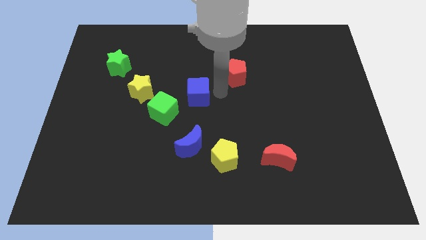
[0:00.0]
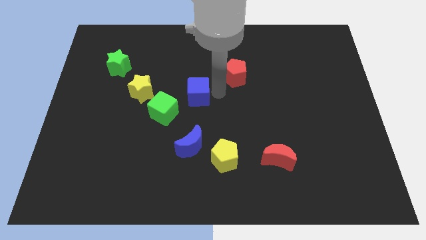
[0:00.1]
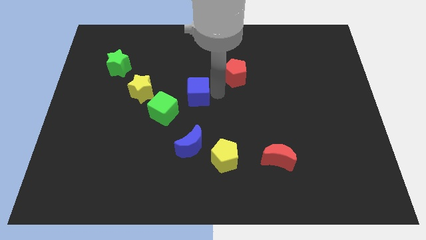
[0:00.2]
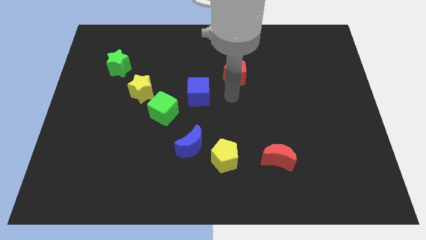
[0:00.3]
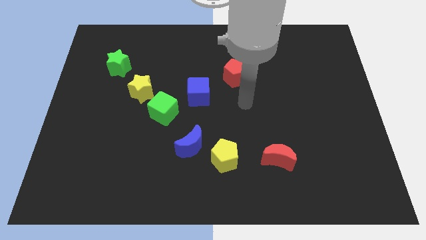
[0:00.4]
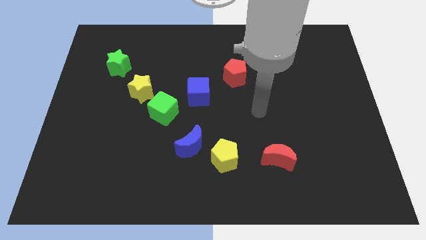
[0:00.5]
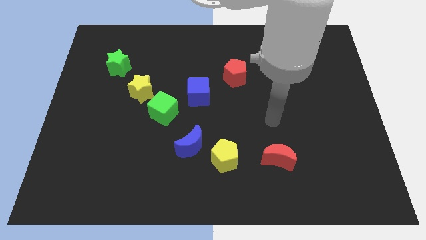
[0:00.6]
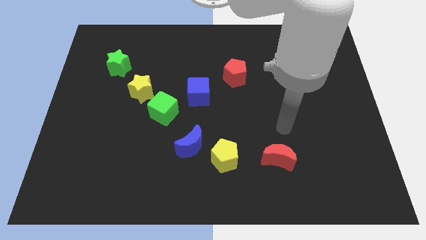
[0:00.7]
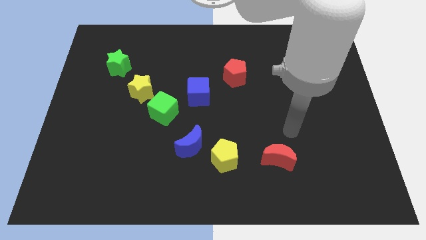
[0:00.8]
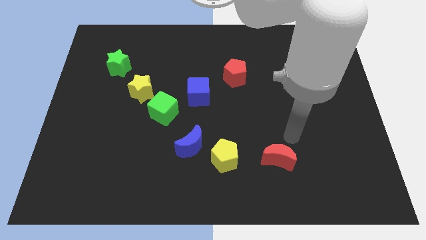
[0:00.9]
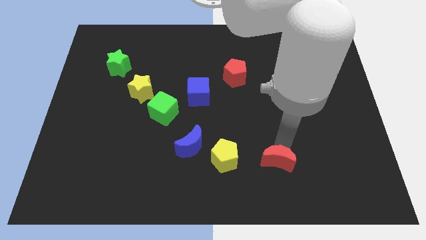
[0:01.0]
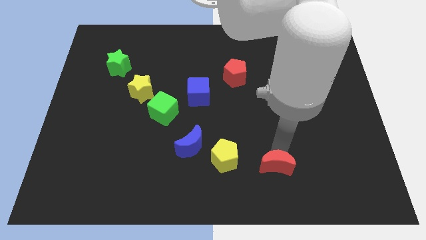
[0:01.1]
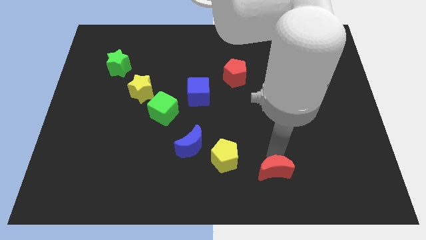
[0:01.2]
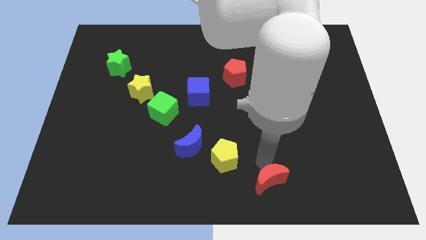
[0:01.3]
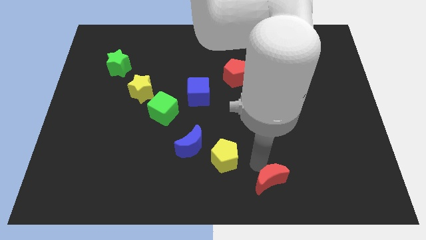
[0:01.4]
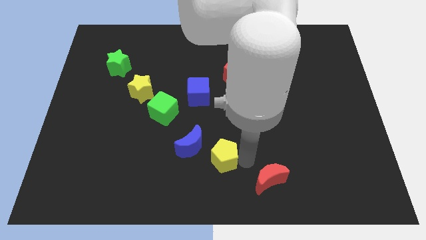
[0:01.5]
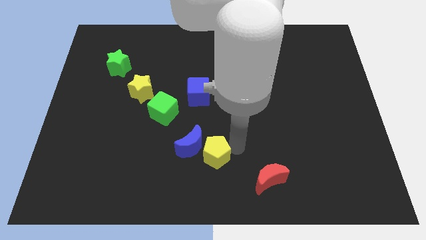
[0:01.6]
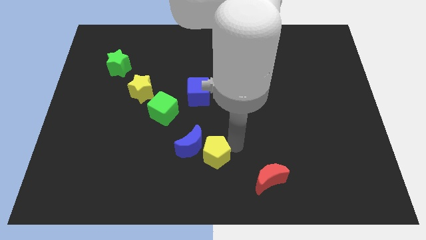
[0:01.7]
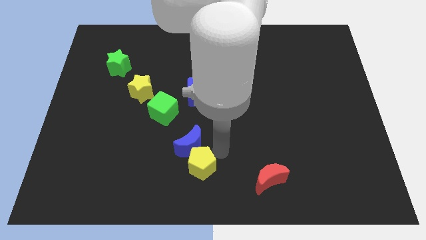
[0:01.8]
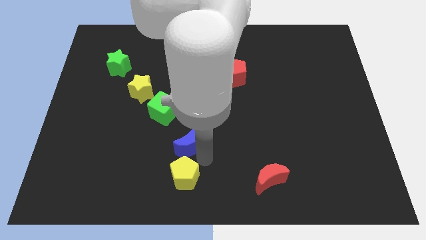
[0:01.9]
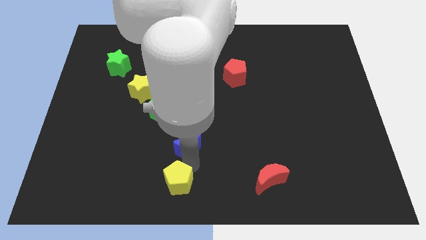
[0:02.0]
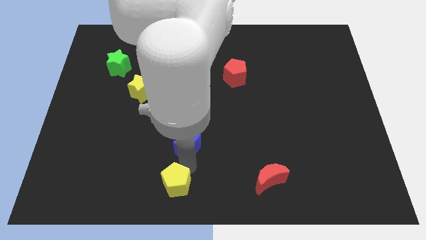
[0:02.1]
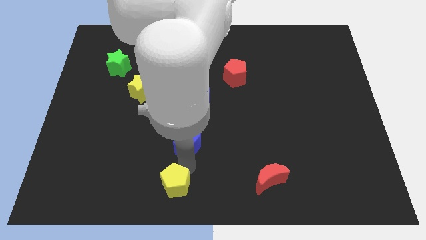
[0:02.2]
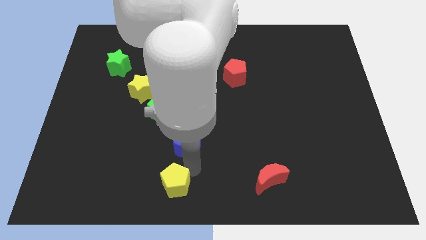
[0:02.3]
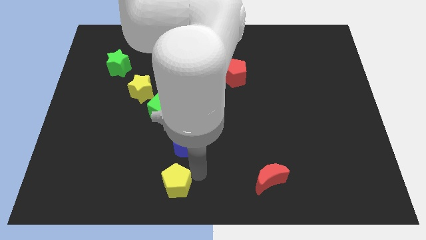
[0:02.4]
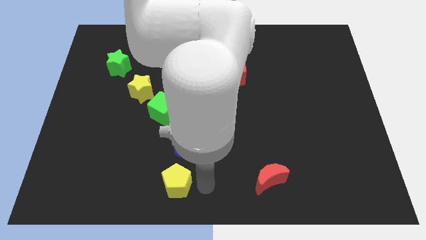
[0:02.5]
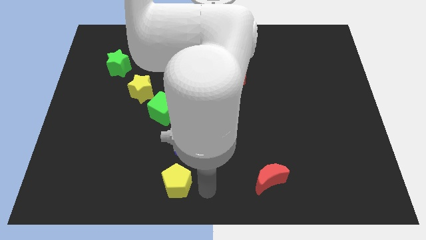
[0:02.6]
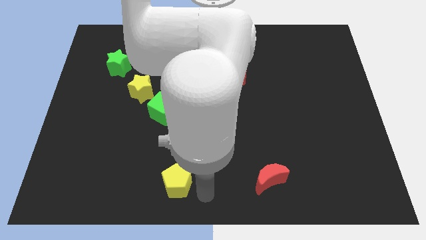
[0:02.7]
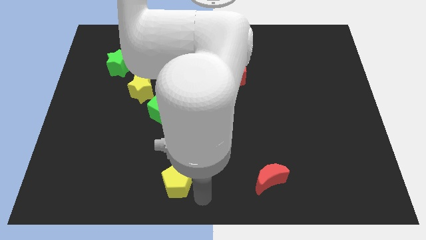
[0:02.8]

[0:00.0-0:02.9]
move the red moon and the yellow pentagon towards bottom

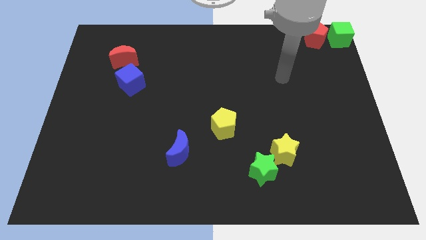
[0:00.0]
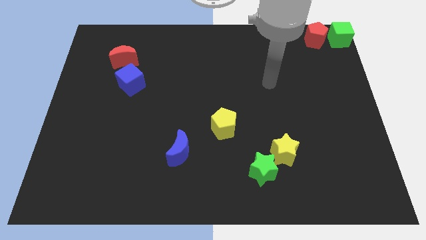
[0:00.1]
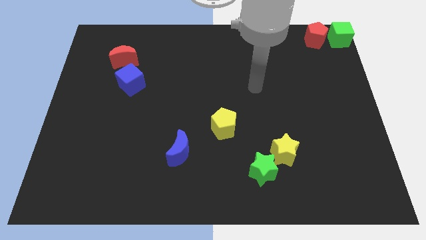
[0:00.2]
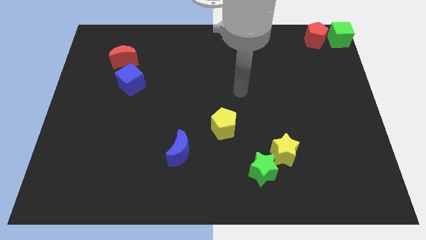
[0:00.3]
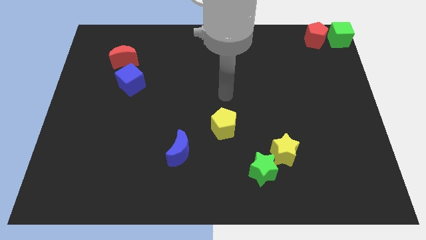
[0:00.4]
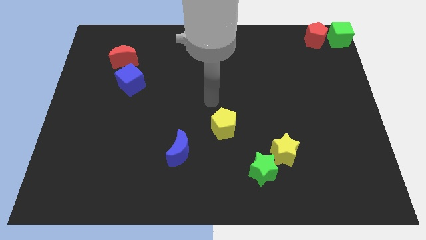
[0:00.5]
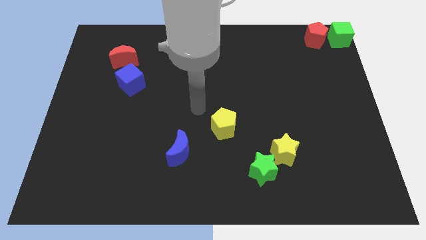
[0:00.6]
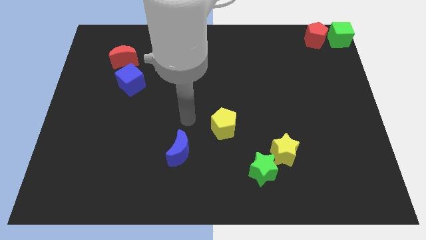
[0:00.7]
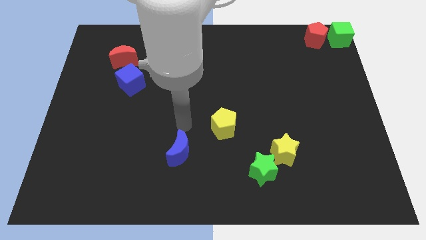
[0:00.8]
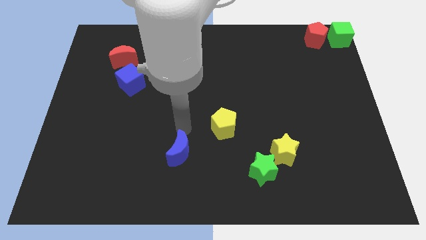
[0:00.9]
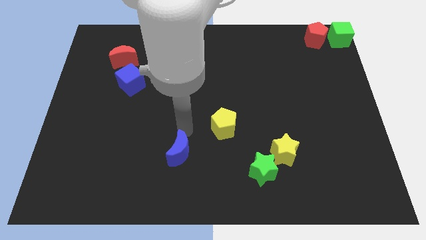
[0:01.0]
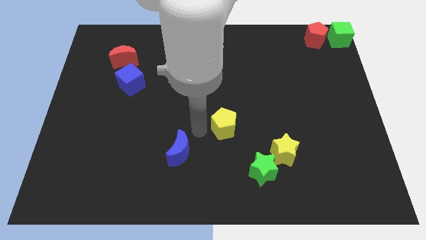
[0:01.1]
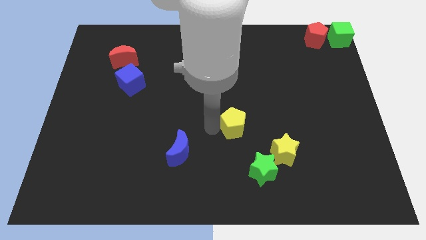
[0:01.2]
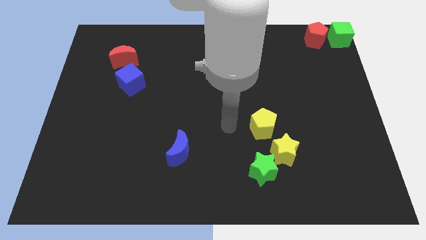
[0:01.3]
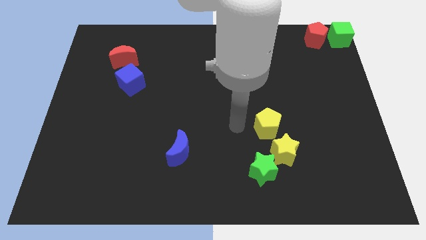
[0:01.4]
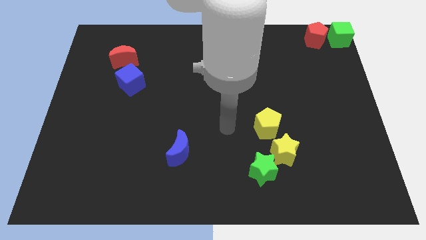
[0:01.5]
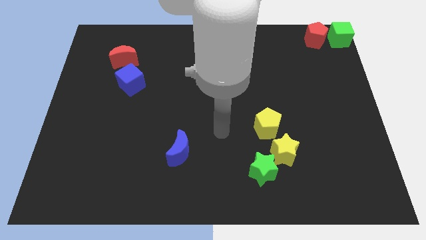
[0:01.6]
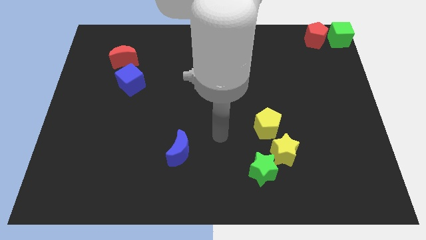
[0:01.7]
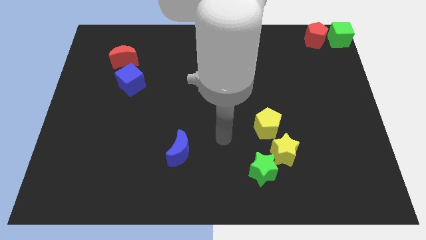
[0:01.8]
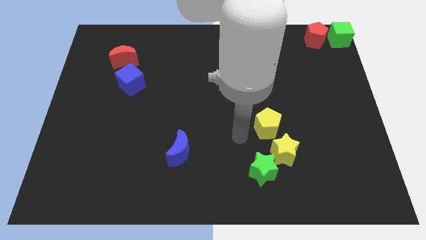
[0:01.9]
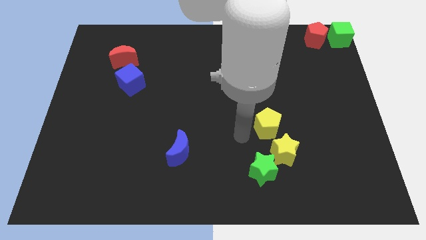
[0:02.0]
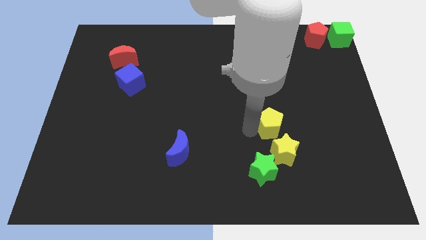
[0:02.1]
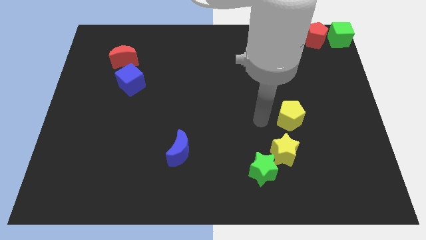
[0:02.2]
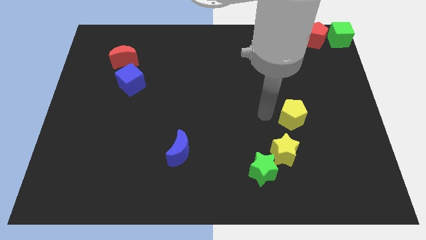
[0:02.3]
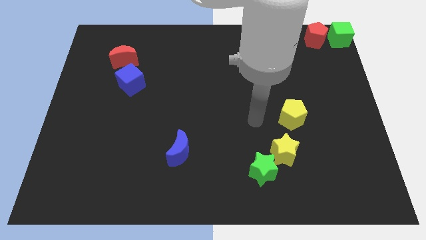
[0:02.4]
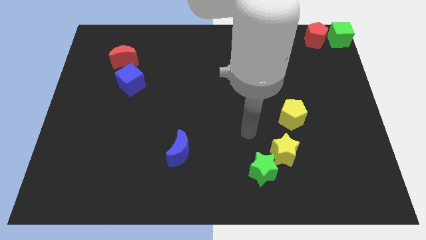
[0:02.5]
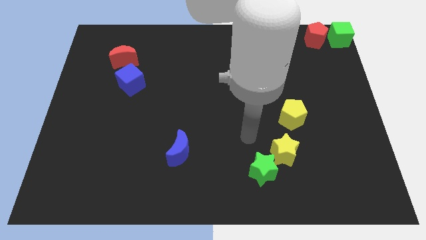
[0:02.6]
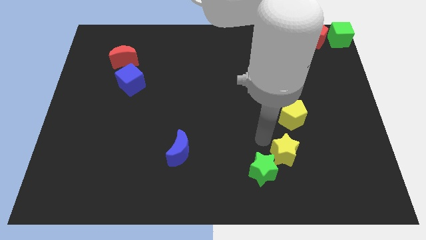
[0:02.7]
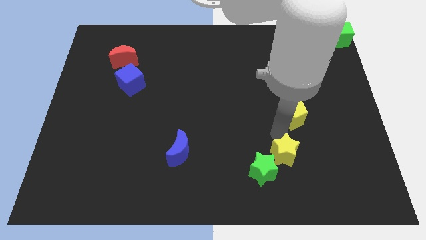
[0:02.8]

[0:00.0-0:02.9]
move the yellow pentagon to the right side

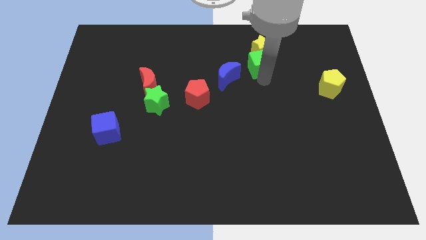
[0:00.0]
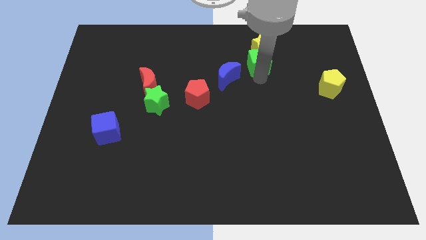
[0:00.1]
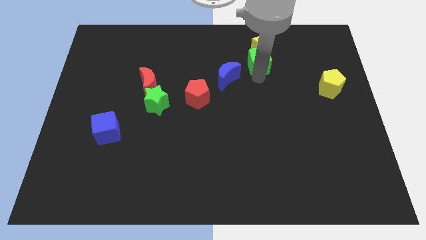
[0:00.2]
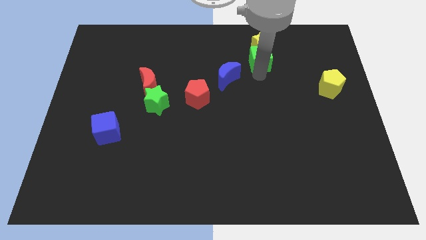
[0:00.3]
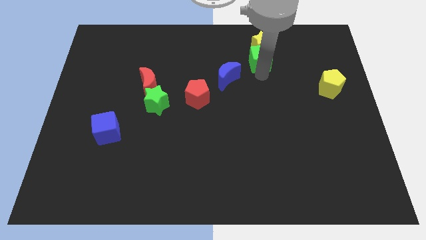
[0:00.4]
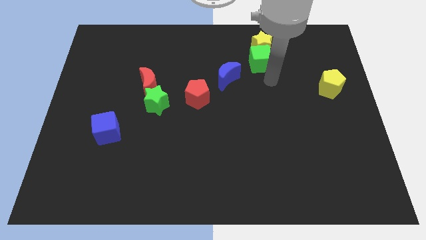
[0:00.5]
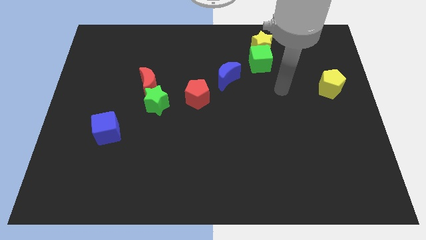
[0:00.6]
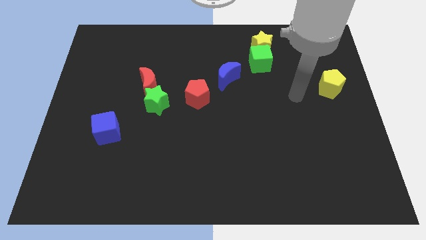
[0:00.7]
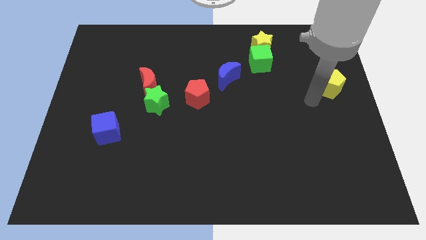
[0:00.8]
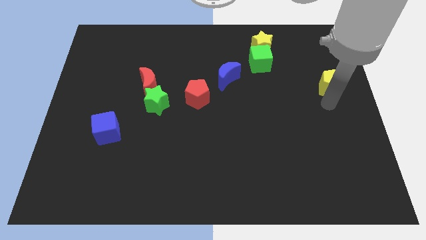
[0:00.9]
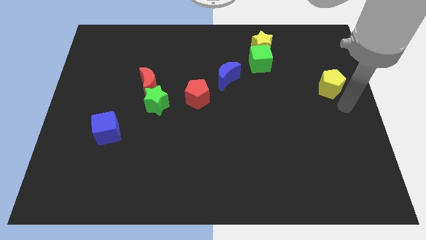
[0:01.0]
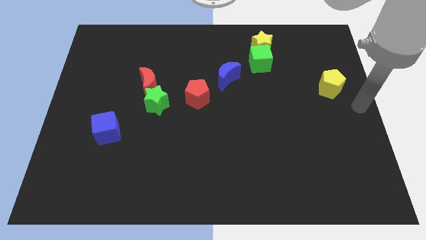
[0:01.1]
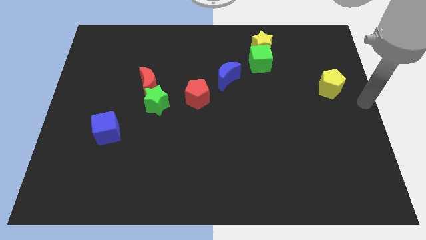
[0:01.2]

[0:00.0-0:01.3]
point your arm at the center right of the board

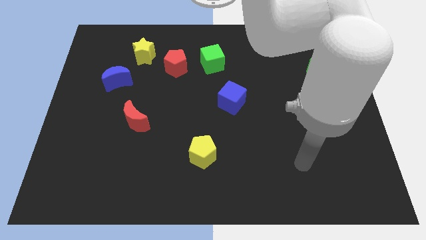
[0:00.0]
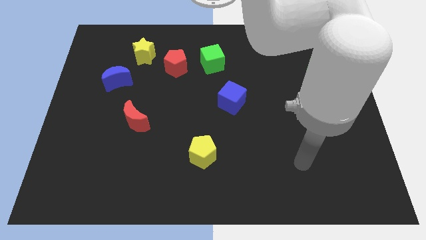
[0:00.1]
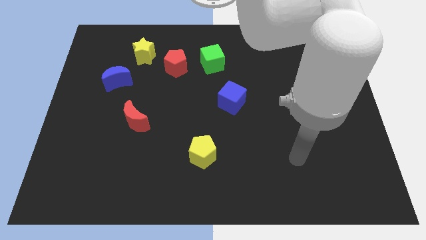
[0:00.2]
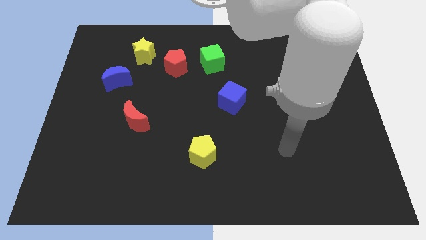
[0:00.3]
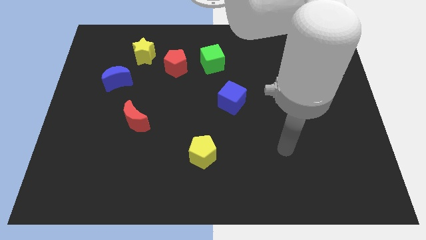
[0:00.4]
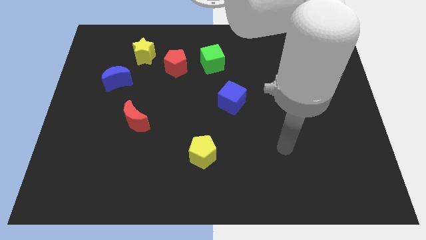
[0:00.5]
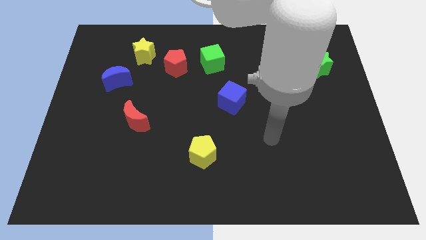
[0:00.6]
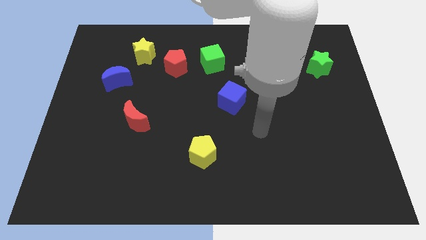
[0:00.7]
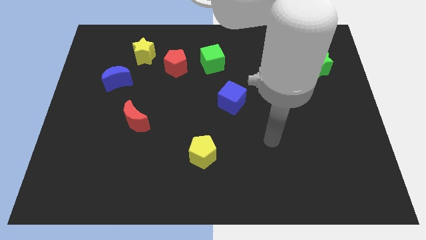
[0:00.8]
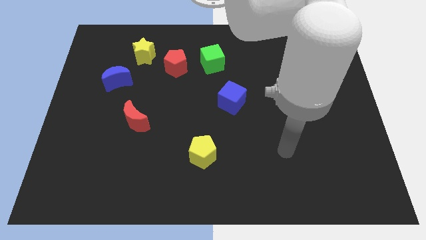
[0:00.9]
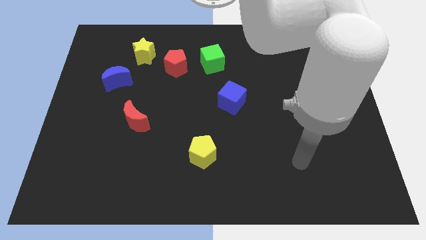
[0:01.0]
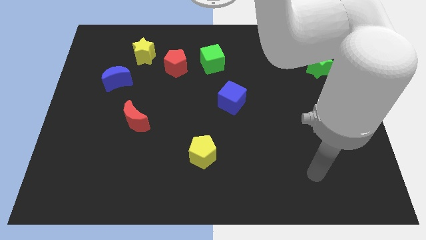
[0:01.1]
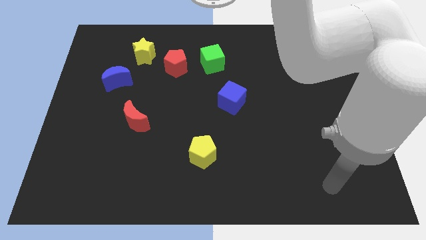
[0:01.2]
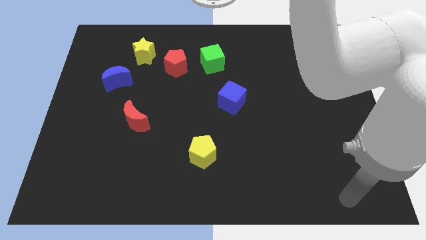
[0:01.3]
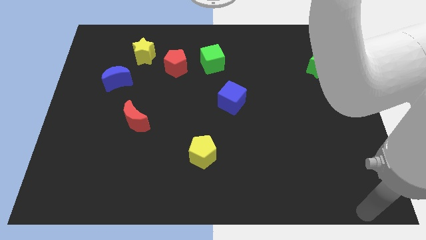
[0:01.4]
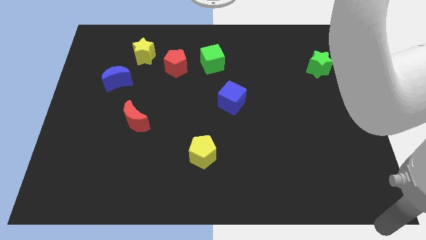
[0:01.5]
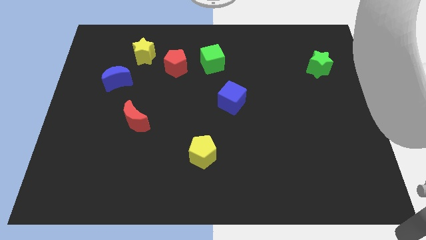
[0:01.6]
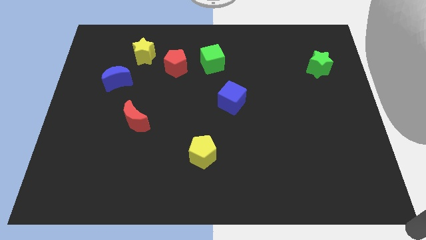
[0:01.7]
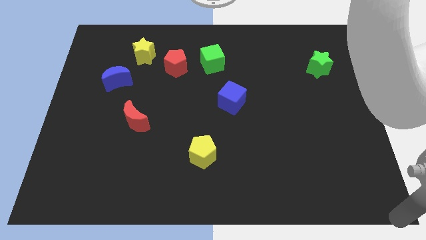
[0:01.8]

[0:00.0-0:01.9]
point your arm at the bottom right corner of the board
